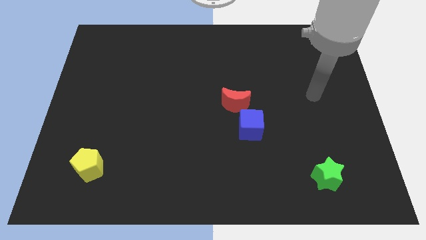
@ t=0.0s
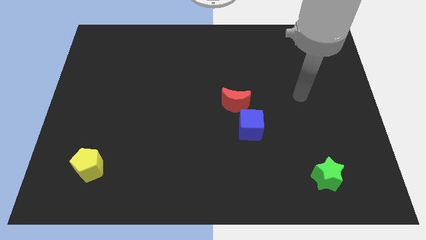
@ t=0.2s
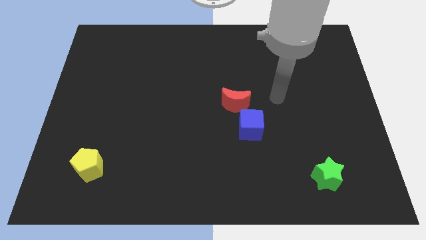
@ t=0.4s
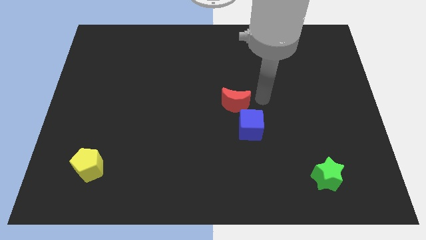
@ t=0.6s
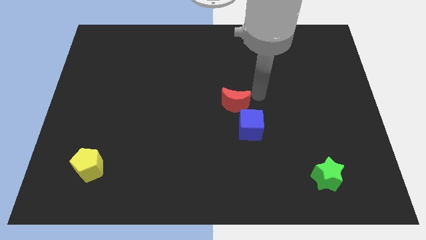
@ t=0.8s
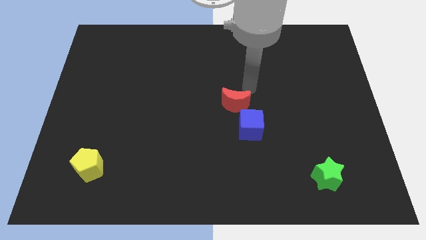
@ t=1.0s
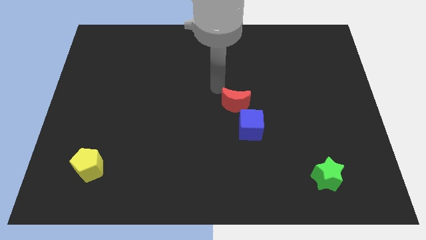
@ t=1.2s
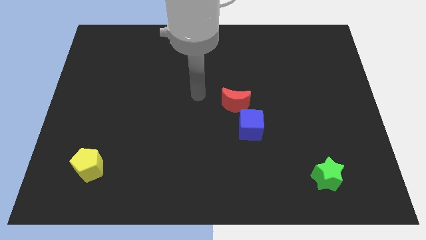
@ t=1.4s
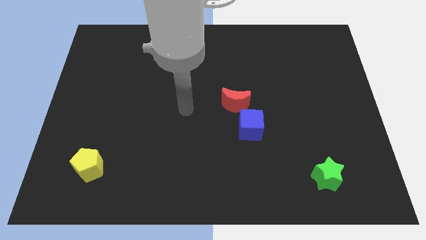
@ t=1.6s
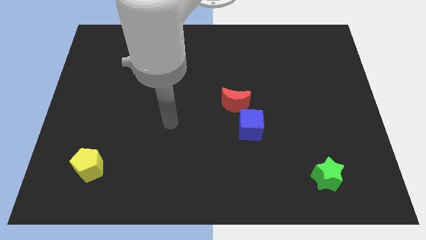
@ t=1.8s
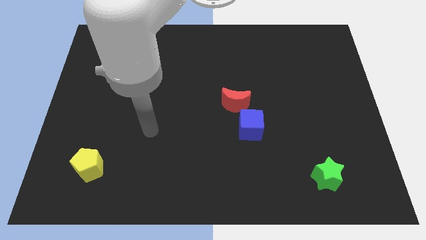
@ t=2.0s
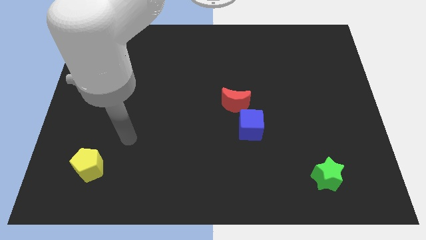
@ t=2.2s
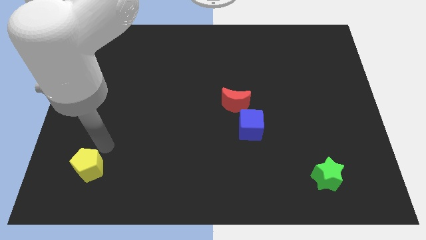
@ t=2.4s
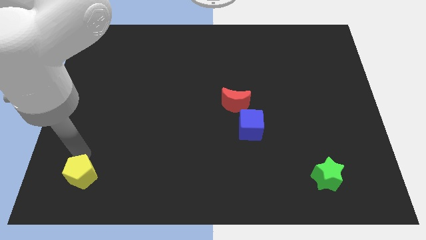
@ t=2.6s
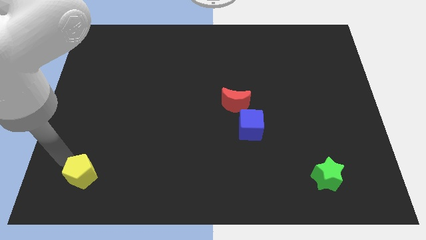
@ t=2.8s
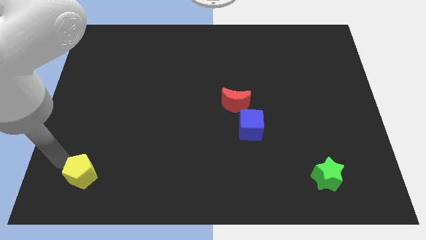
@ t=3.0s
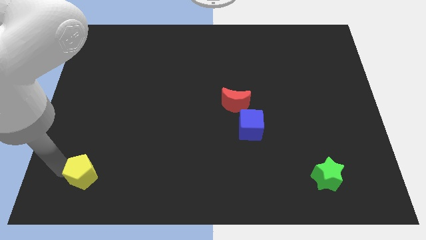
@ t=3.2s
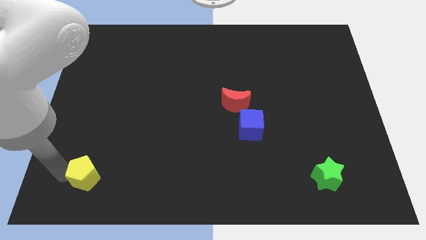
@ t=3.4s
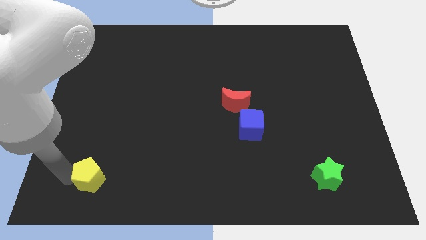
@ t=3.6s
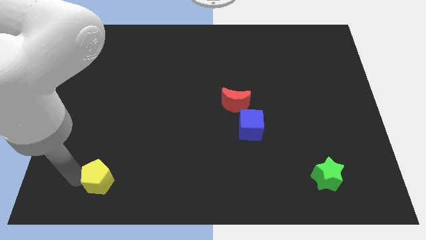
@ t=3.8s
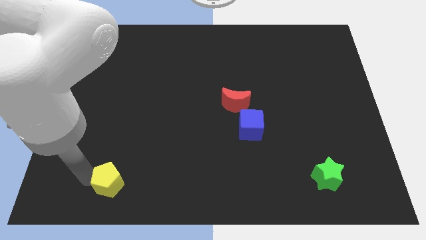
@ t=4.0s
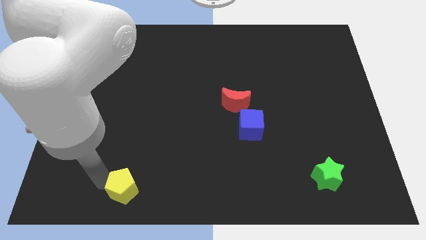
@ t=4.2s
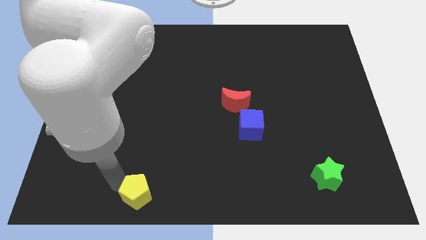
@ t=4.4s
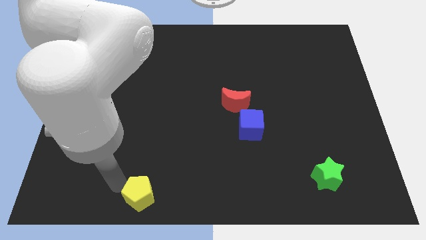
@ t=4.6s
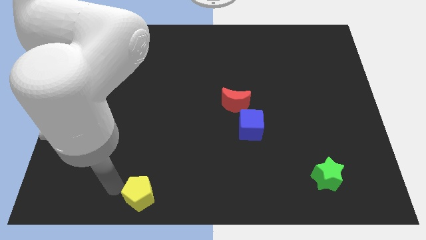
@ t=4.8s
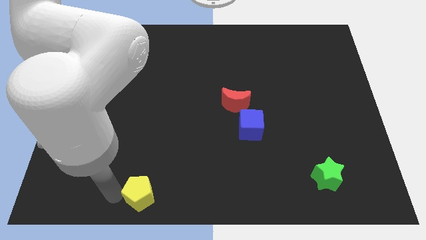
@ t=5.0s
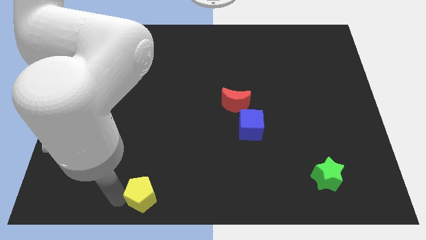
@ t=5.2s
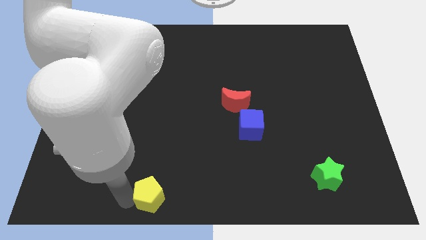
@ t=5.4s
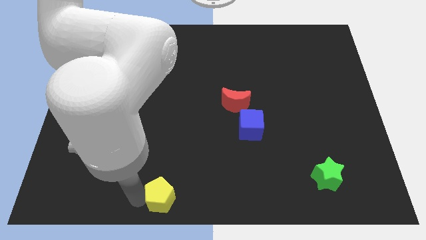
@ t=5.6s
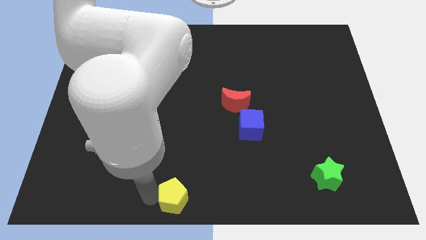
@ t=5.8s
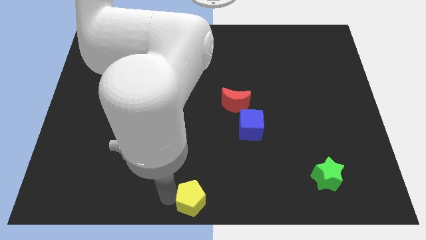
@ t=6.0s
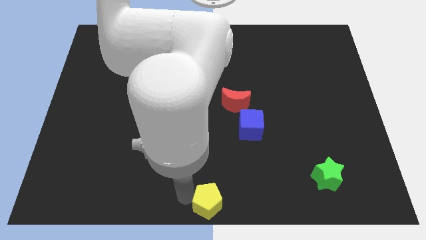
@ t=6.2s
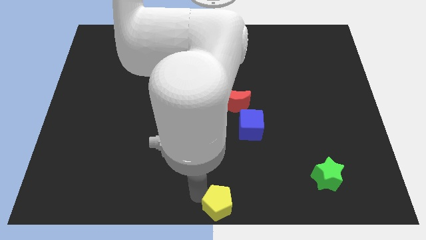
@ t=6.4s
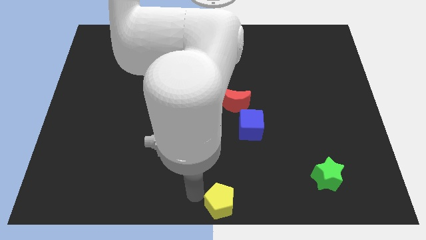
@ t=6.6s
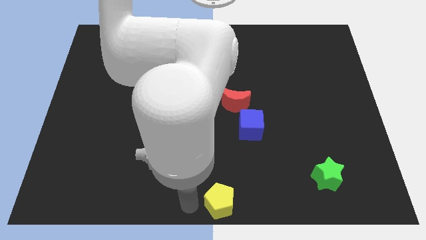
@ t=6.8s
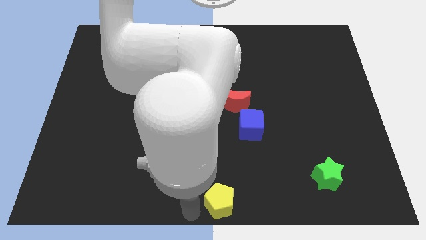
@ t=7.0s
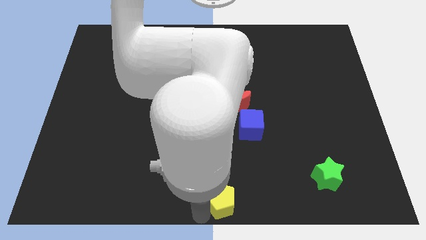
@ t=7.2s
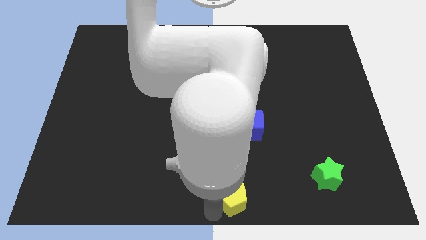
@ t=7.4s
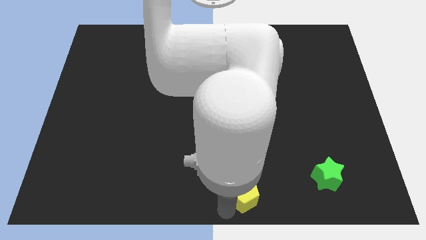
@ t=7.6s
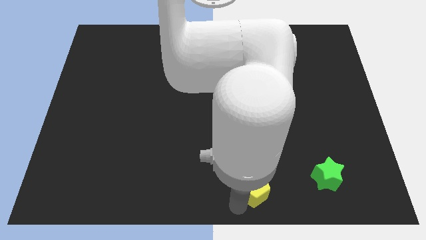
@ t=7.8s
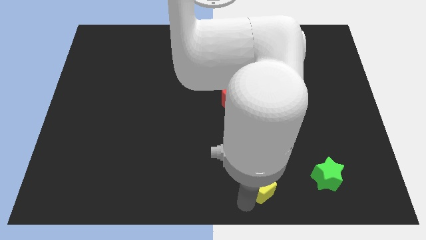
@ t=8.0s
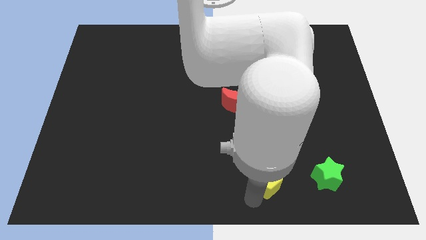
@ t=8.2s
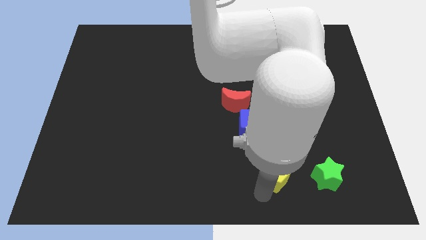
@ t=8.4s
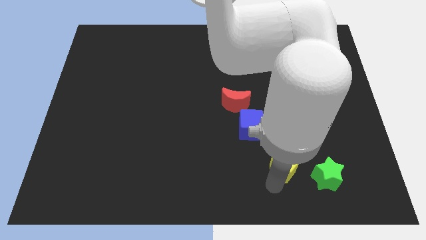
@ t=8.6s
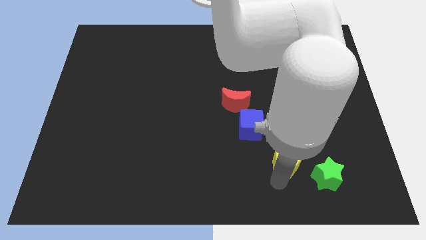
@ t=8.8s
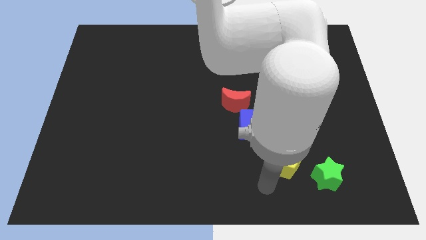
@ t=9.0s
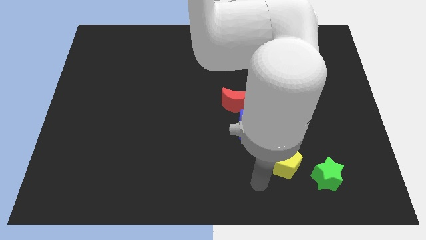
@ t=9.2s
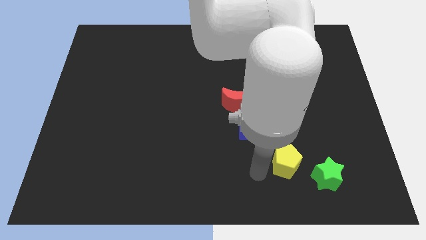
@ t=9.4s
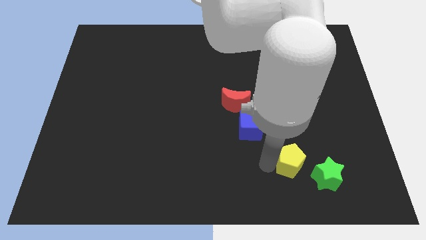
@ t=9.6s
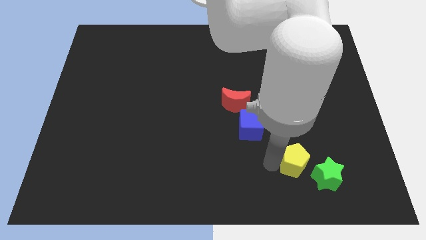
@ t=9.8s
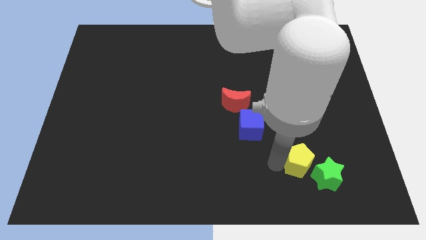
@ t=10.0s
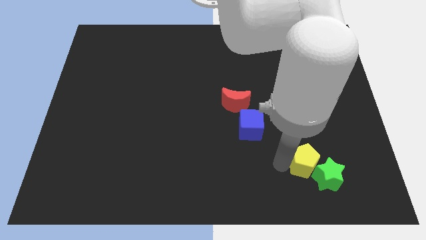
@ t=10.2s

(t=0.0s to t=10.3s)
put the yellow pentagon towards the green block

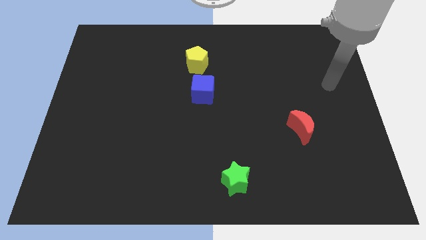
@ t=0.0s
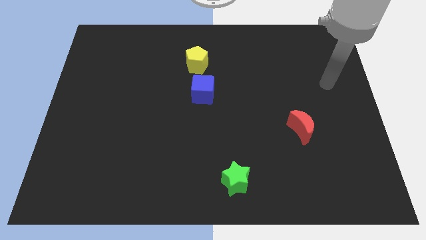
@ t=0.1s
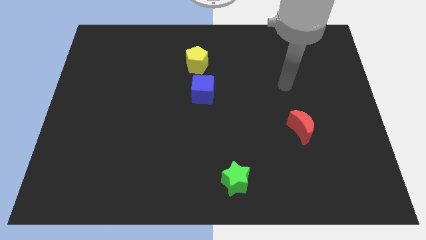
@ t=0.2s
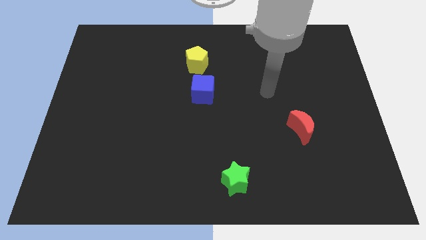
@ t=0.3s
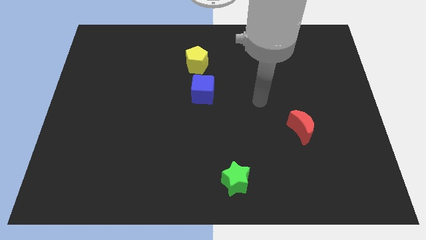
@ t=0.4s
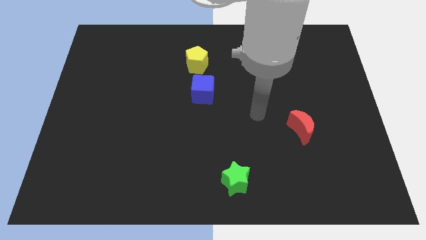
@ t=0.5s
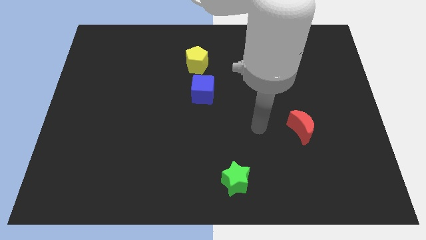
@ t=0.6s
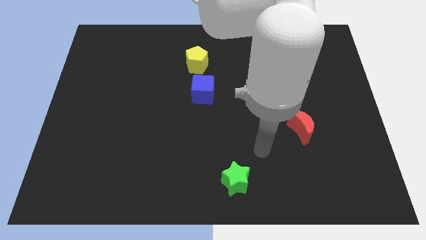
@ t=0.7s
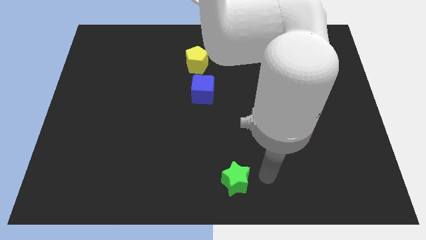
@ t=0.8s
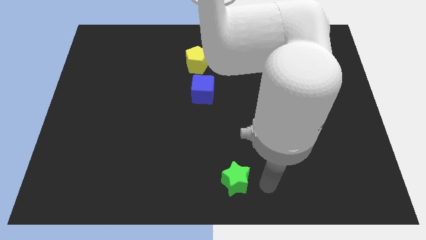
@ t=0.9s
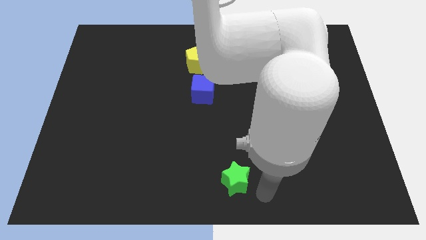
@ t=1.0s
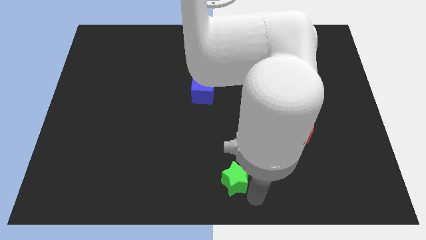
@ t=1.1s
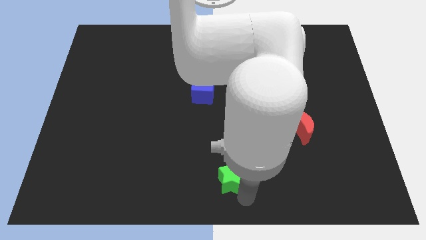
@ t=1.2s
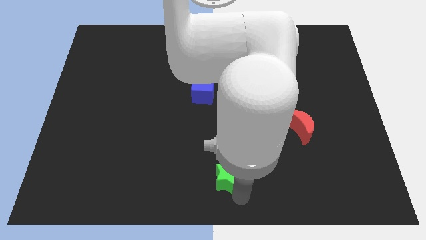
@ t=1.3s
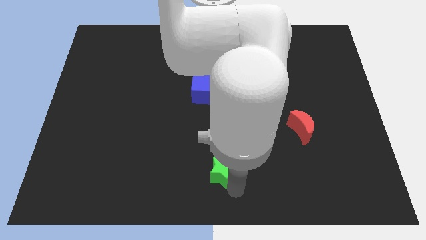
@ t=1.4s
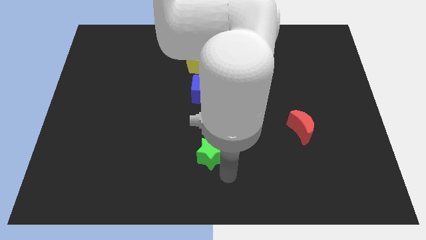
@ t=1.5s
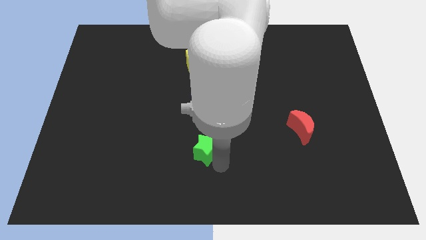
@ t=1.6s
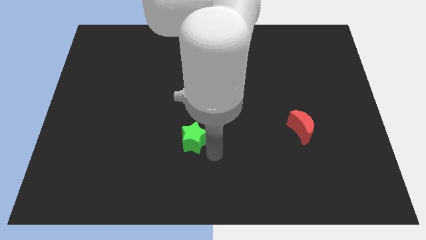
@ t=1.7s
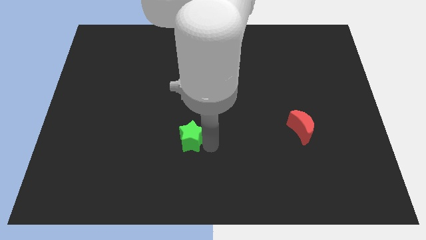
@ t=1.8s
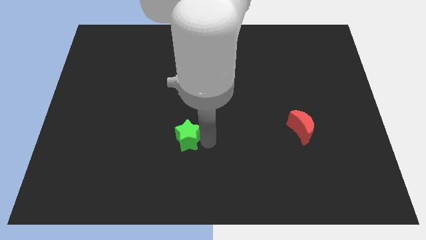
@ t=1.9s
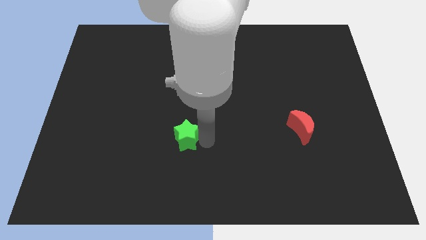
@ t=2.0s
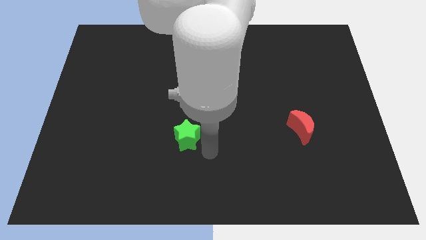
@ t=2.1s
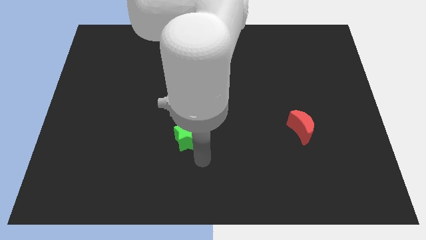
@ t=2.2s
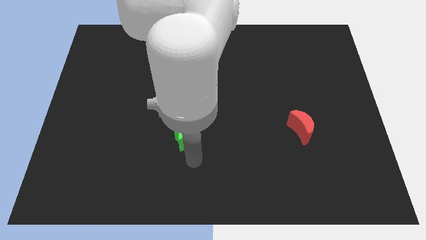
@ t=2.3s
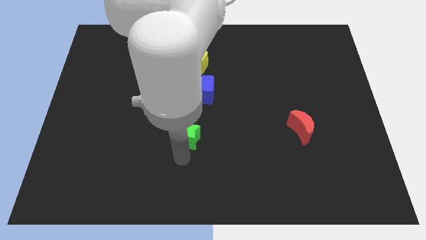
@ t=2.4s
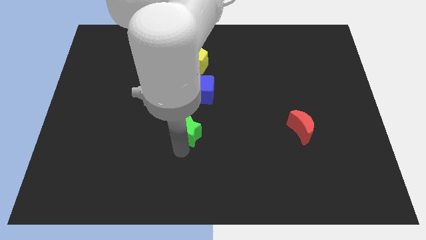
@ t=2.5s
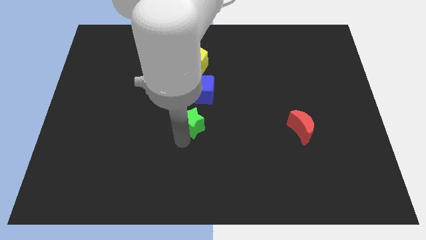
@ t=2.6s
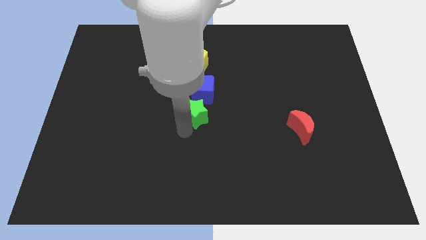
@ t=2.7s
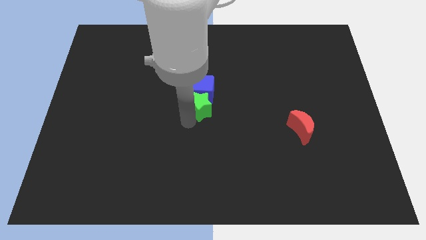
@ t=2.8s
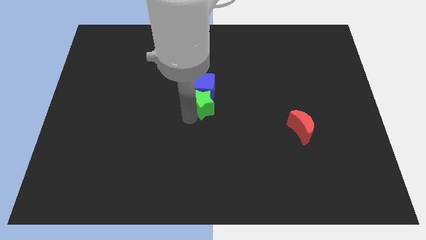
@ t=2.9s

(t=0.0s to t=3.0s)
slide the green block to the blue block

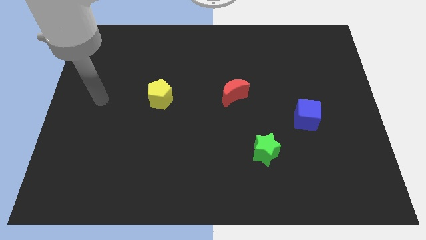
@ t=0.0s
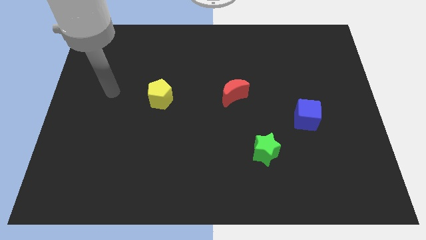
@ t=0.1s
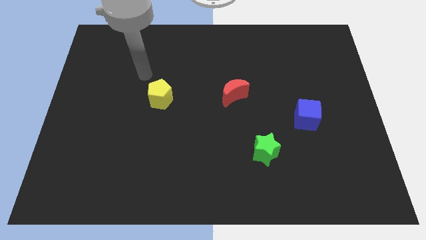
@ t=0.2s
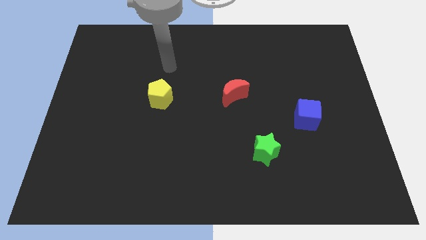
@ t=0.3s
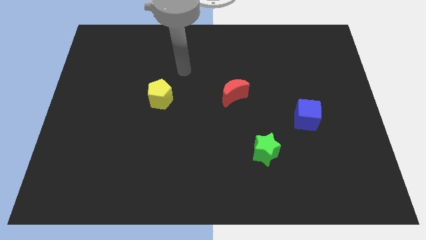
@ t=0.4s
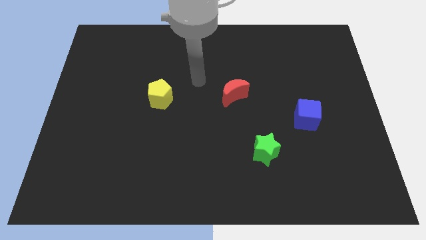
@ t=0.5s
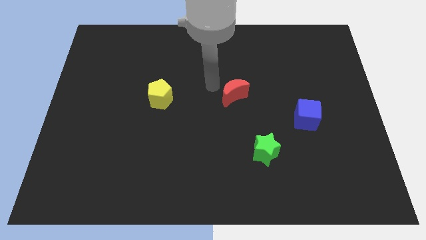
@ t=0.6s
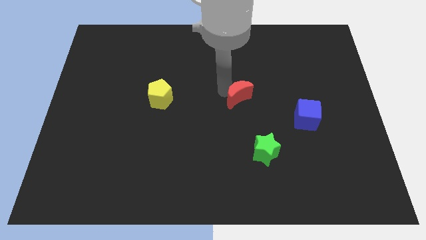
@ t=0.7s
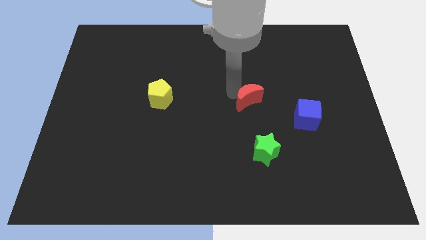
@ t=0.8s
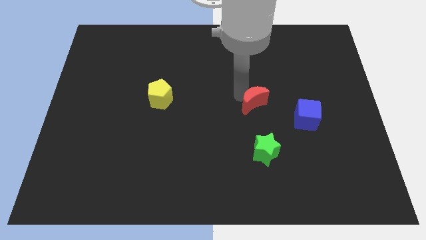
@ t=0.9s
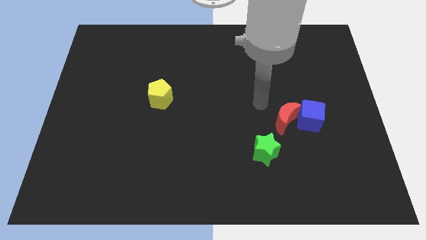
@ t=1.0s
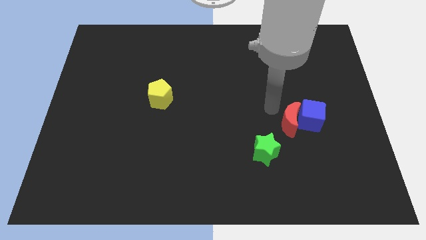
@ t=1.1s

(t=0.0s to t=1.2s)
push the red moon to the blue cube
